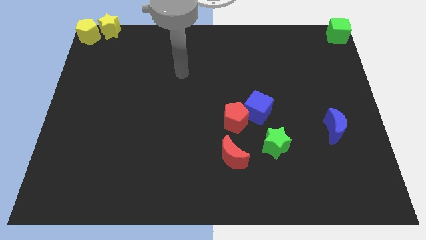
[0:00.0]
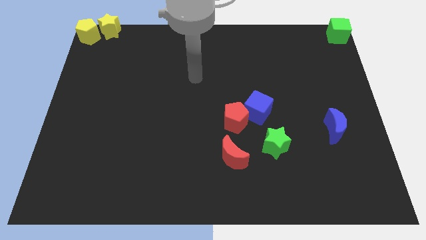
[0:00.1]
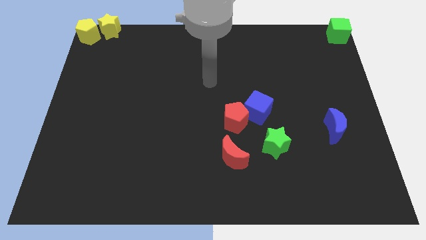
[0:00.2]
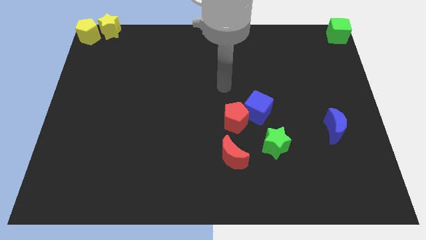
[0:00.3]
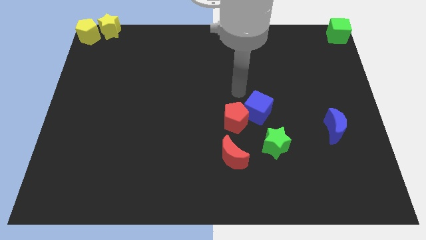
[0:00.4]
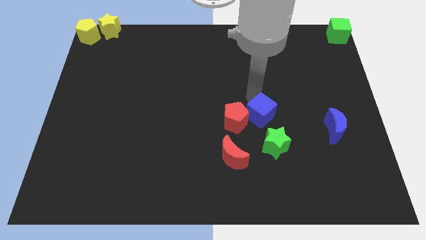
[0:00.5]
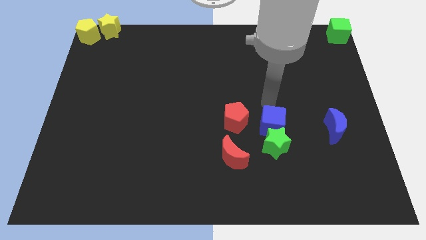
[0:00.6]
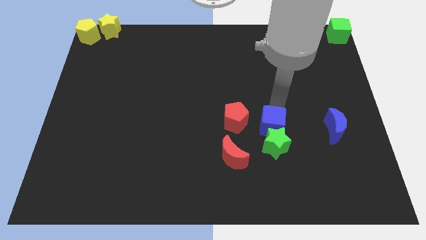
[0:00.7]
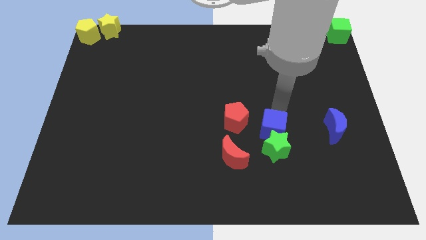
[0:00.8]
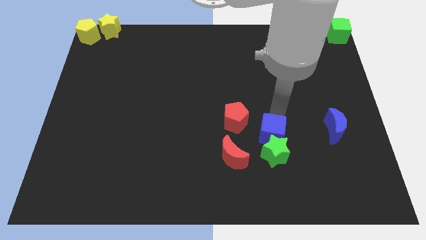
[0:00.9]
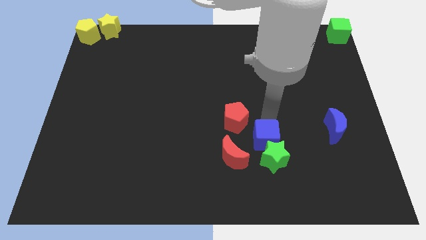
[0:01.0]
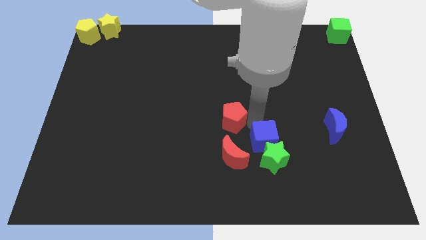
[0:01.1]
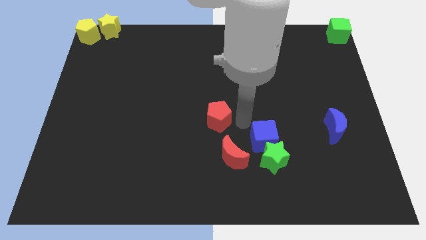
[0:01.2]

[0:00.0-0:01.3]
push the blue cube into the green star

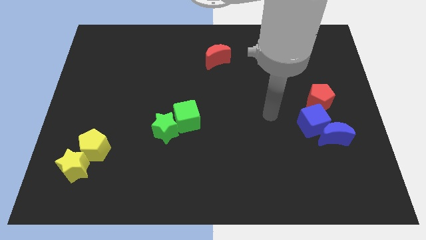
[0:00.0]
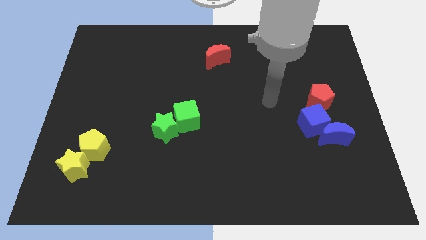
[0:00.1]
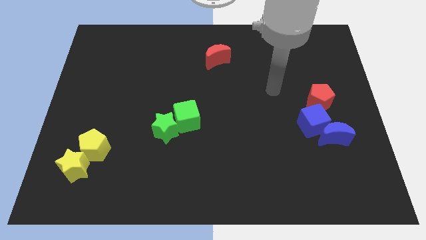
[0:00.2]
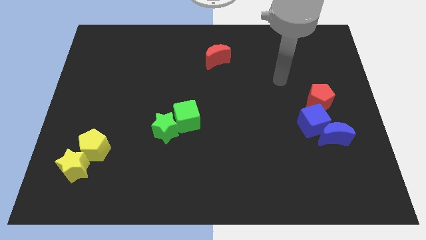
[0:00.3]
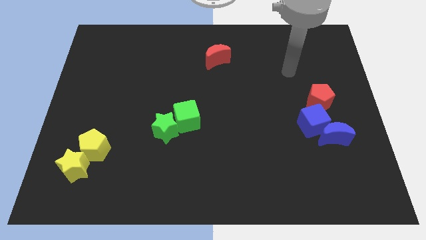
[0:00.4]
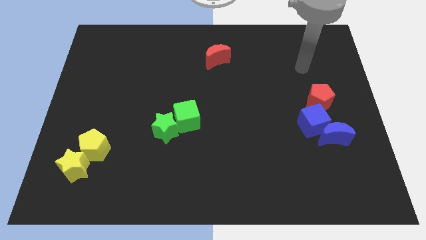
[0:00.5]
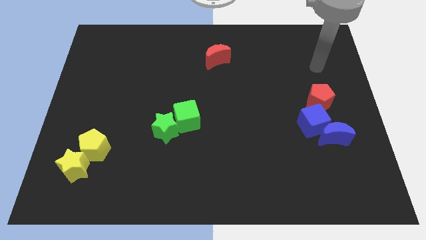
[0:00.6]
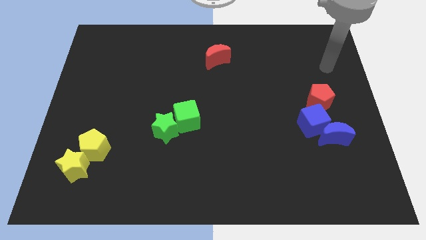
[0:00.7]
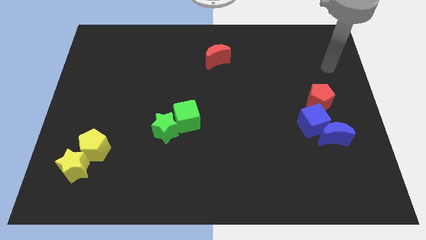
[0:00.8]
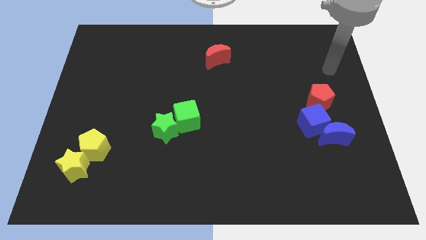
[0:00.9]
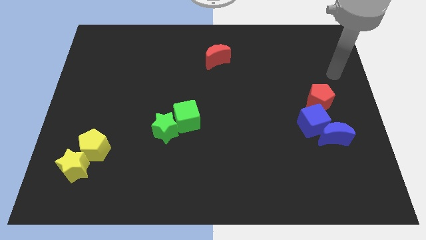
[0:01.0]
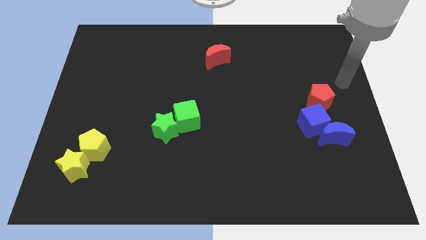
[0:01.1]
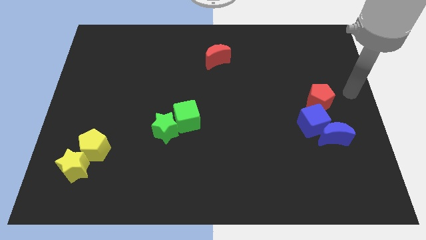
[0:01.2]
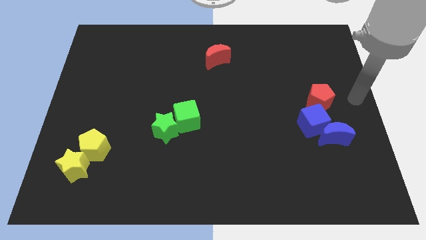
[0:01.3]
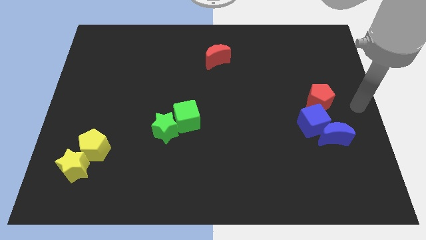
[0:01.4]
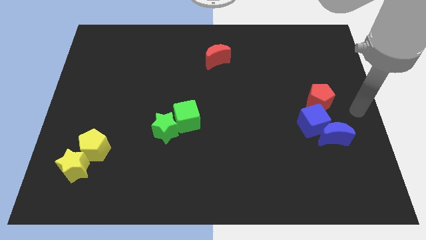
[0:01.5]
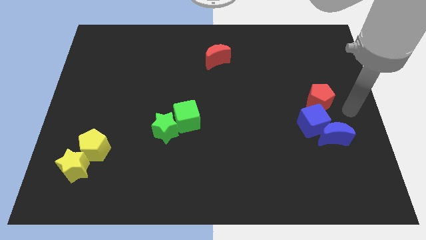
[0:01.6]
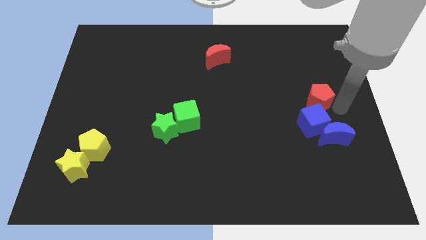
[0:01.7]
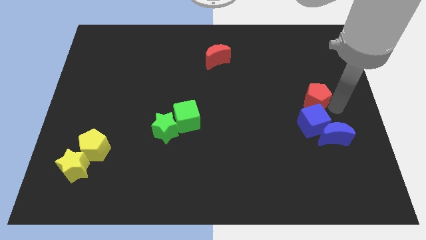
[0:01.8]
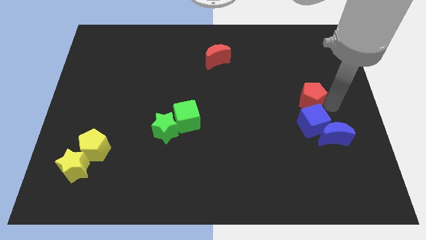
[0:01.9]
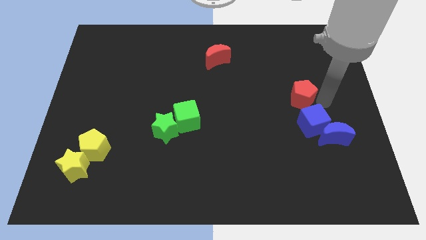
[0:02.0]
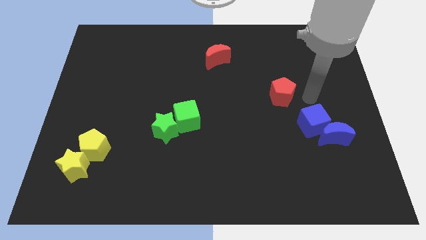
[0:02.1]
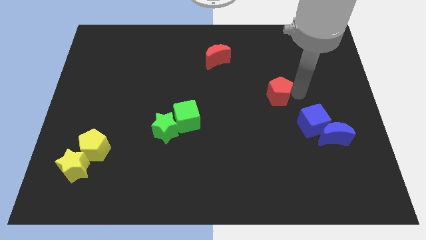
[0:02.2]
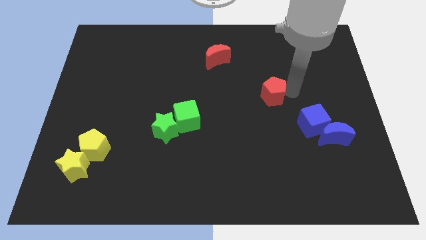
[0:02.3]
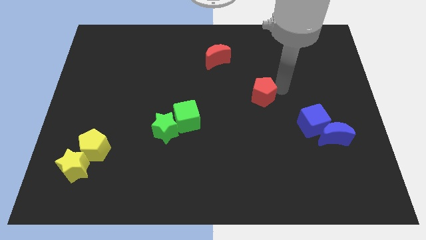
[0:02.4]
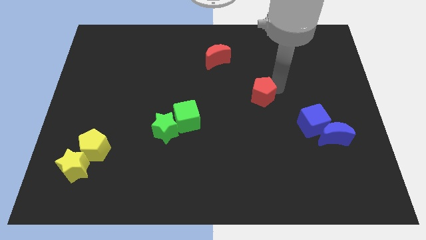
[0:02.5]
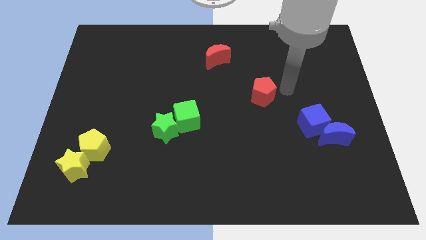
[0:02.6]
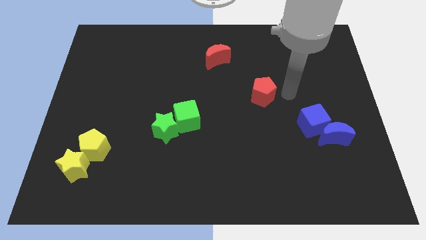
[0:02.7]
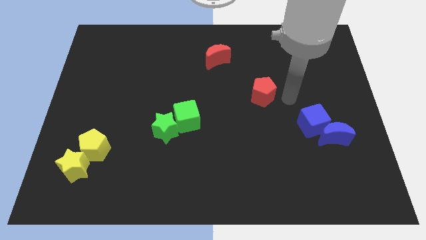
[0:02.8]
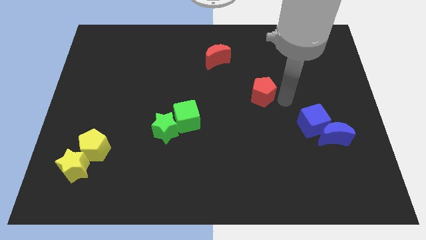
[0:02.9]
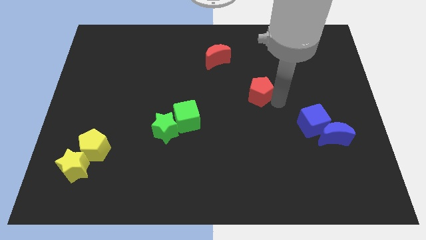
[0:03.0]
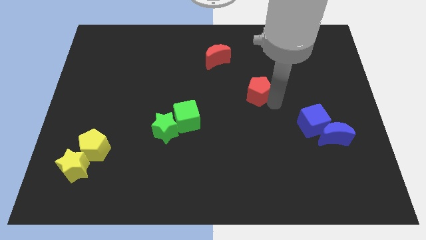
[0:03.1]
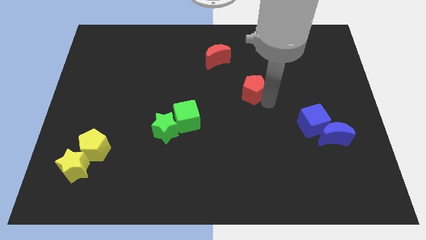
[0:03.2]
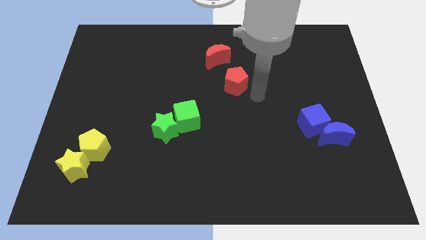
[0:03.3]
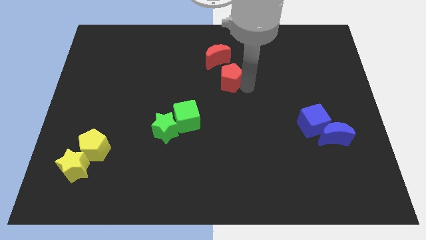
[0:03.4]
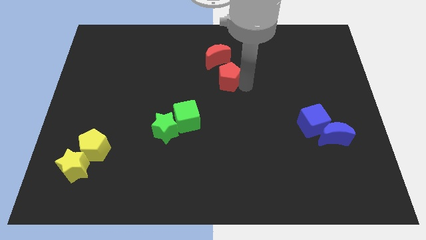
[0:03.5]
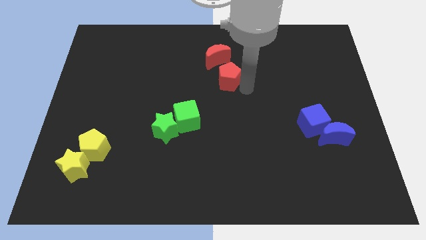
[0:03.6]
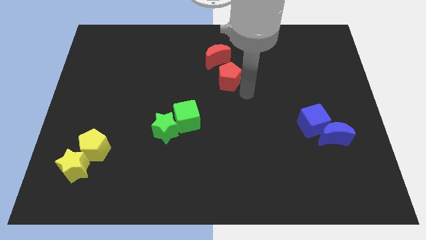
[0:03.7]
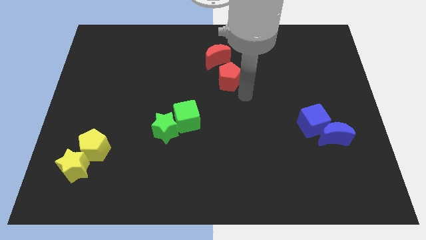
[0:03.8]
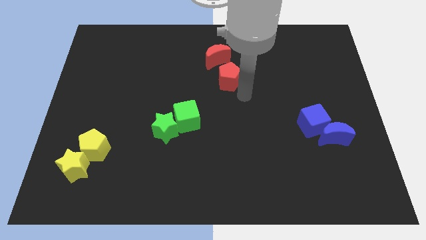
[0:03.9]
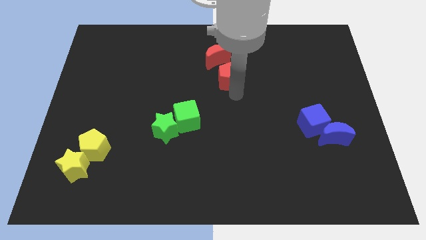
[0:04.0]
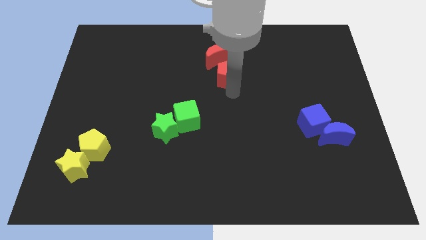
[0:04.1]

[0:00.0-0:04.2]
push the red pentagon close to the red moon

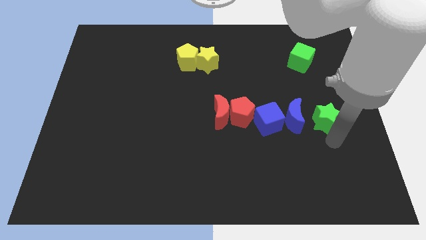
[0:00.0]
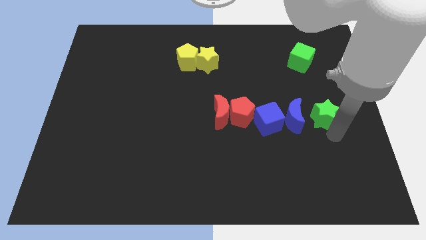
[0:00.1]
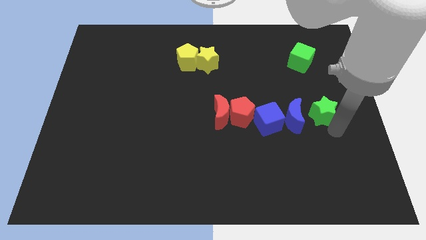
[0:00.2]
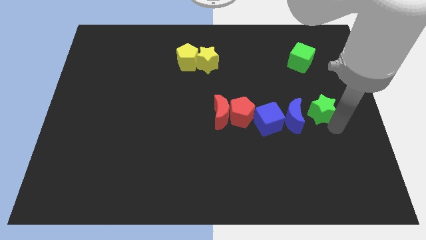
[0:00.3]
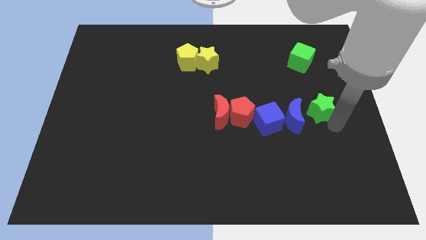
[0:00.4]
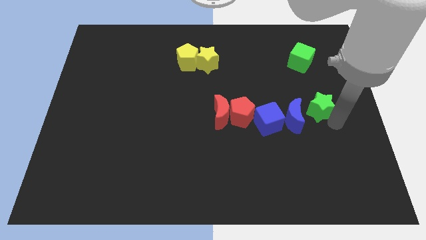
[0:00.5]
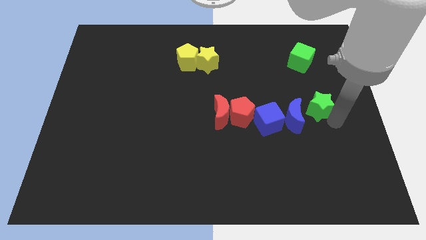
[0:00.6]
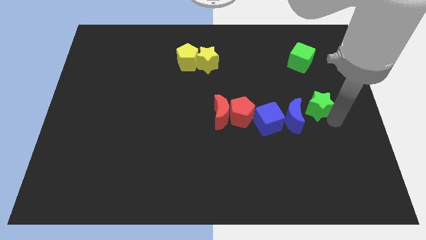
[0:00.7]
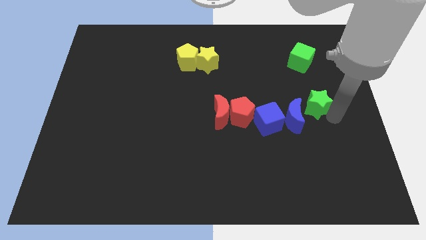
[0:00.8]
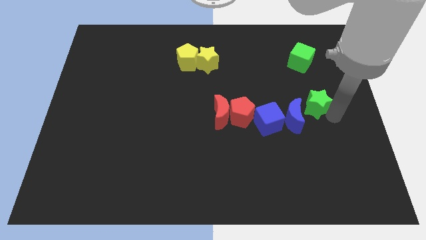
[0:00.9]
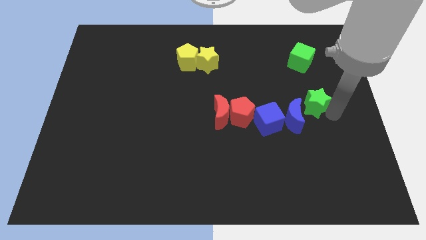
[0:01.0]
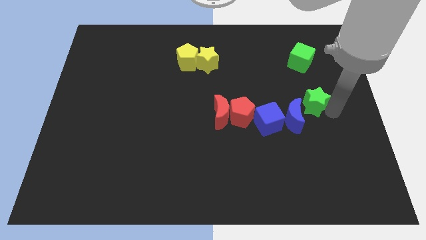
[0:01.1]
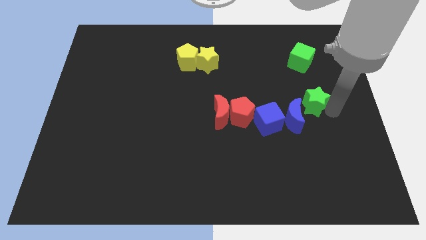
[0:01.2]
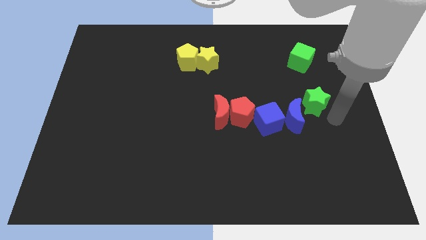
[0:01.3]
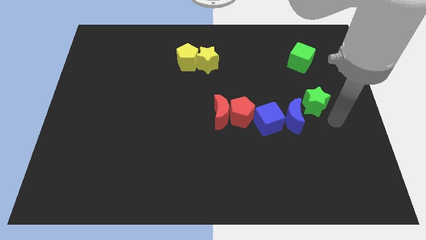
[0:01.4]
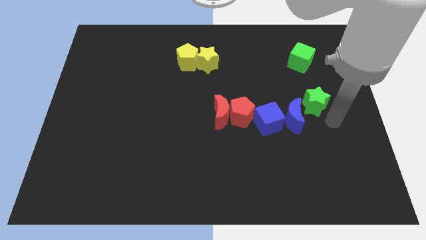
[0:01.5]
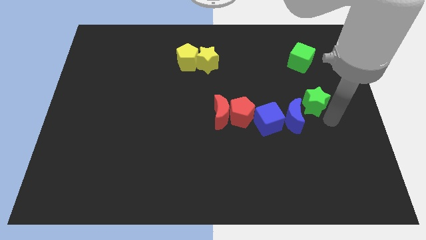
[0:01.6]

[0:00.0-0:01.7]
push the green star to the top right side of the blue moon

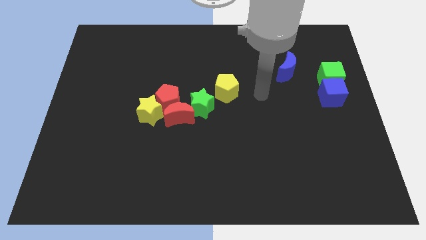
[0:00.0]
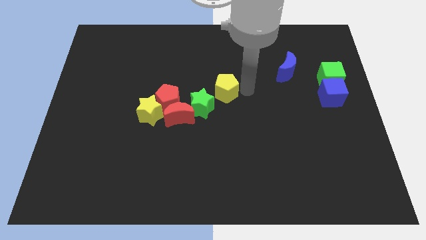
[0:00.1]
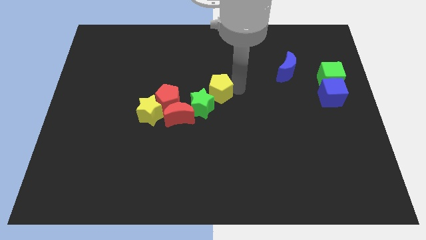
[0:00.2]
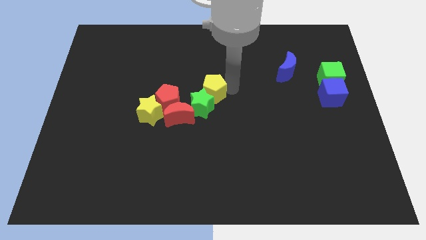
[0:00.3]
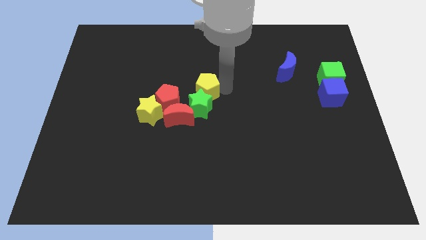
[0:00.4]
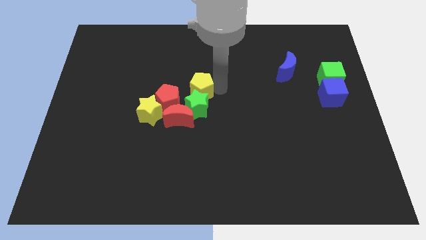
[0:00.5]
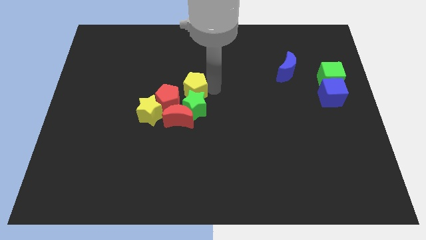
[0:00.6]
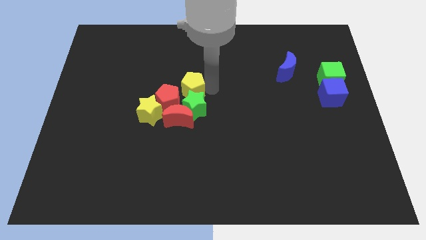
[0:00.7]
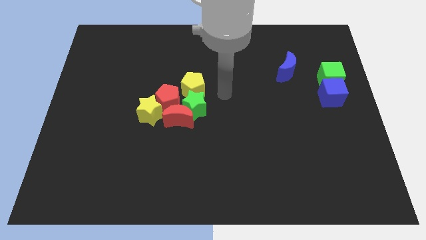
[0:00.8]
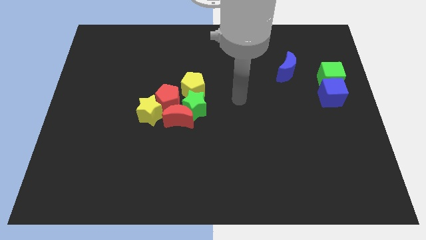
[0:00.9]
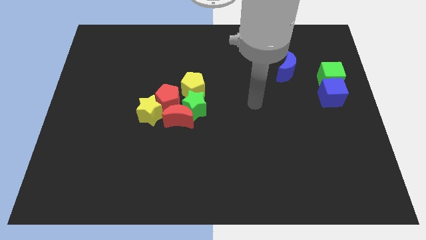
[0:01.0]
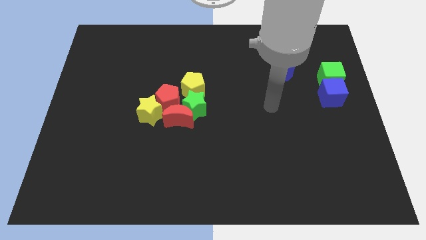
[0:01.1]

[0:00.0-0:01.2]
push the yellow pentagon into the group of blocks

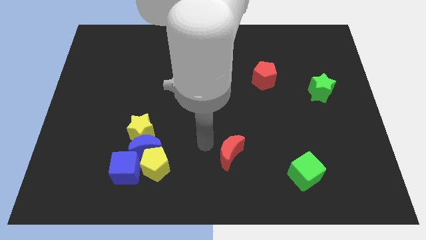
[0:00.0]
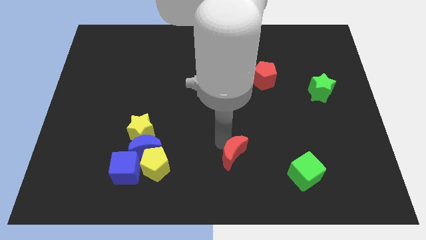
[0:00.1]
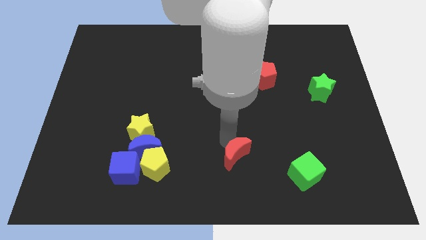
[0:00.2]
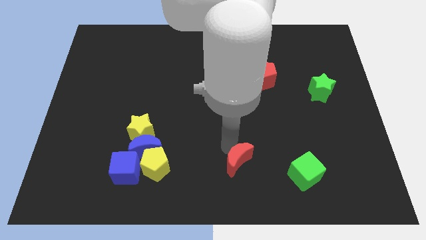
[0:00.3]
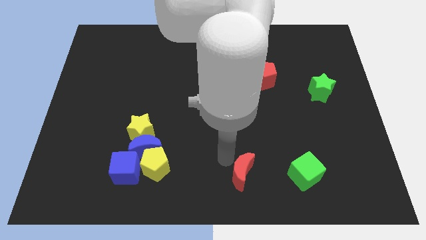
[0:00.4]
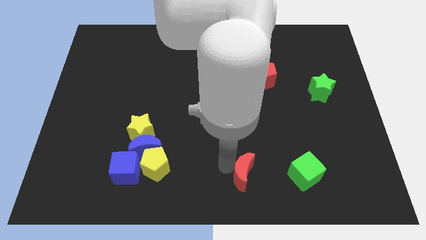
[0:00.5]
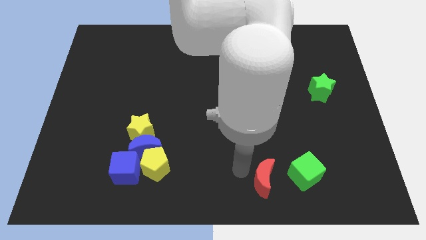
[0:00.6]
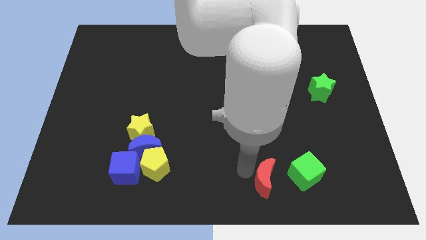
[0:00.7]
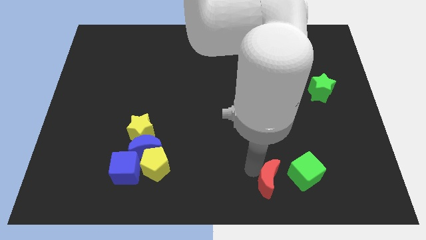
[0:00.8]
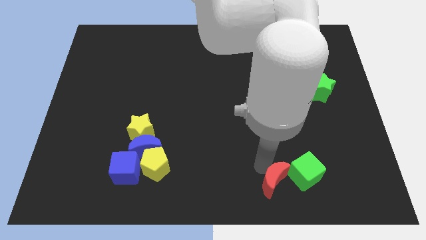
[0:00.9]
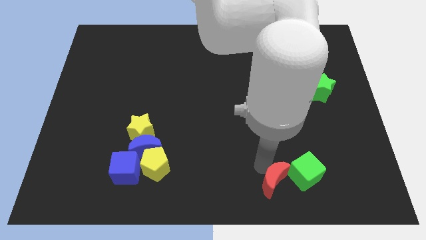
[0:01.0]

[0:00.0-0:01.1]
move red moon into green cube
